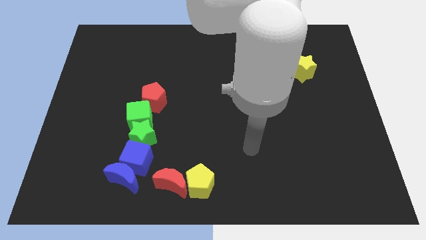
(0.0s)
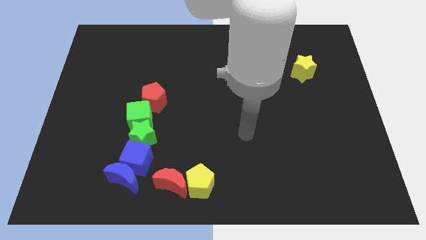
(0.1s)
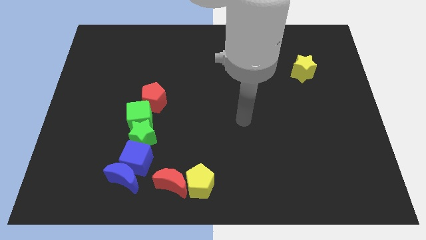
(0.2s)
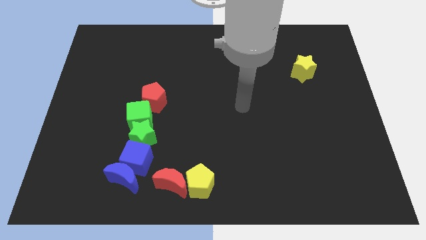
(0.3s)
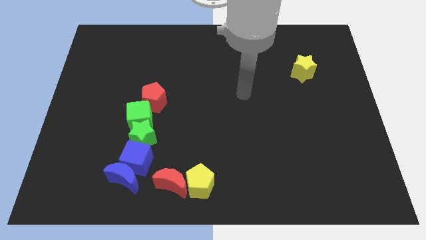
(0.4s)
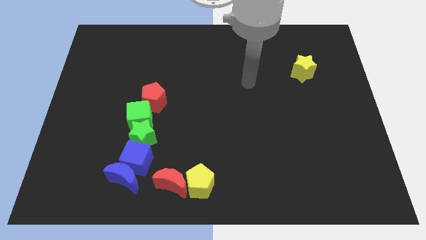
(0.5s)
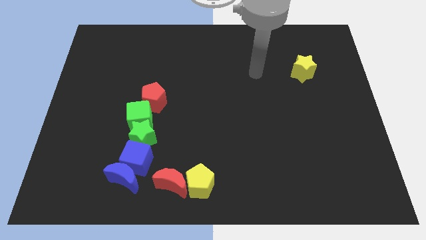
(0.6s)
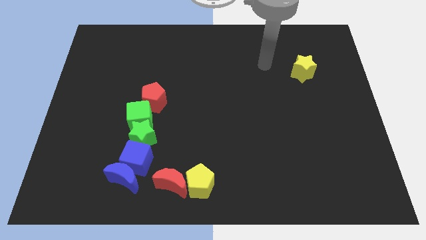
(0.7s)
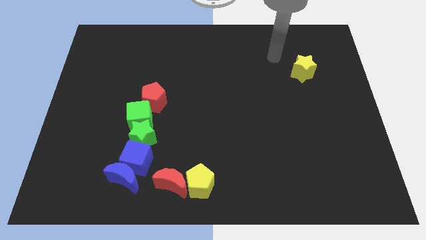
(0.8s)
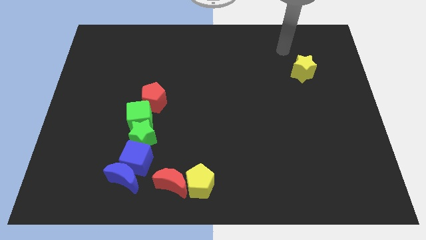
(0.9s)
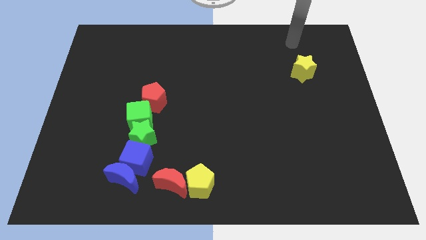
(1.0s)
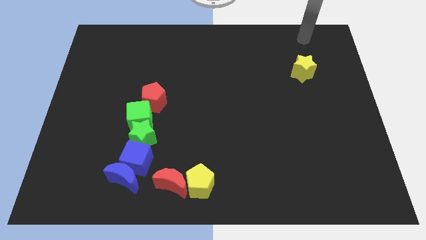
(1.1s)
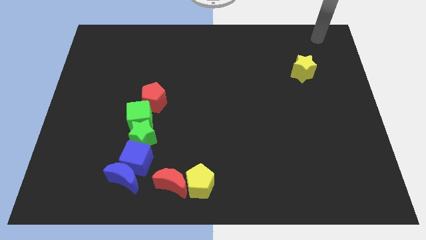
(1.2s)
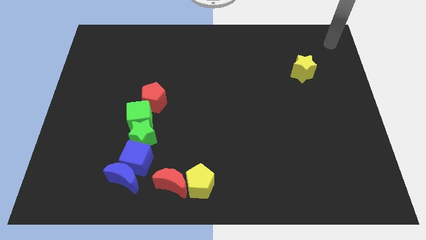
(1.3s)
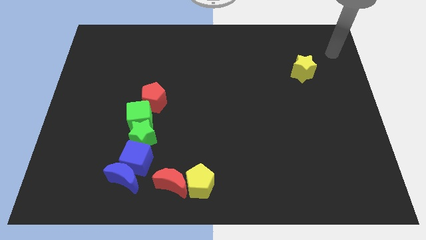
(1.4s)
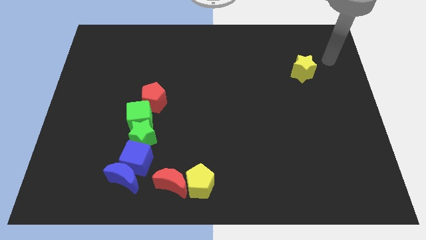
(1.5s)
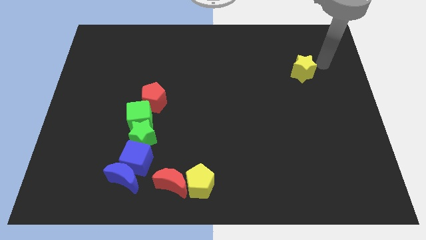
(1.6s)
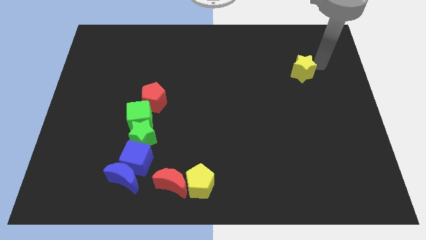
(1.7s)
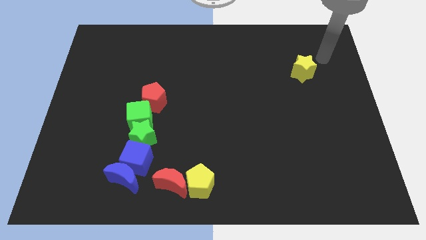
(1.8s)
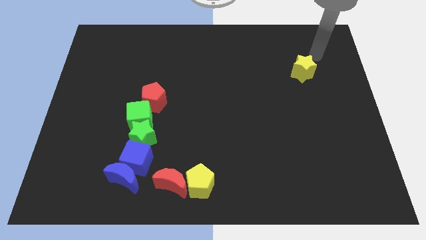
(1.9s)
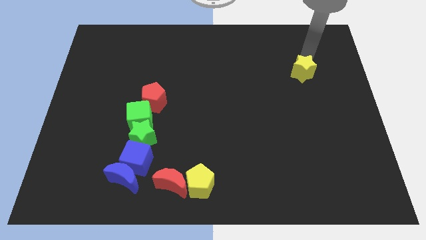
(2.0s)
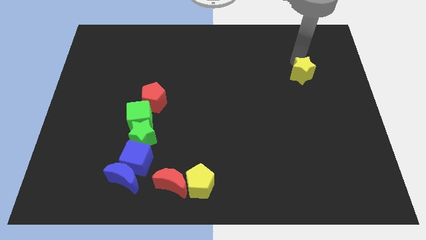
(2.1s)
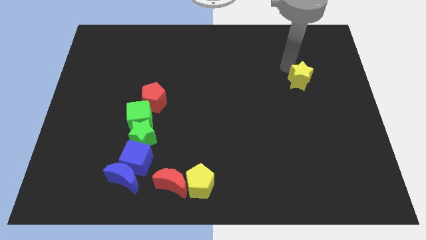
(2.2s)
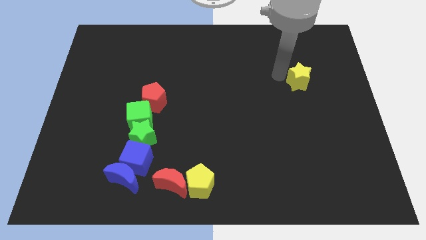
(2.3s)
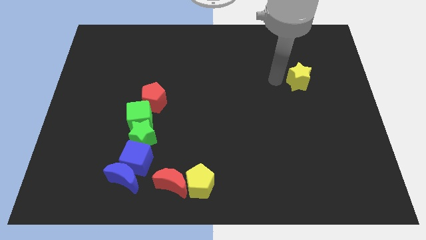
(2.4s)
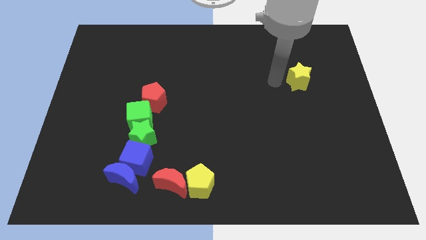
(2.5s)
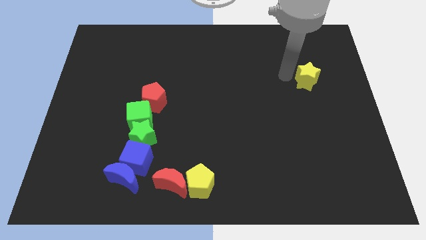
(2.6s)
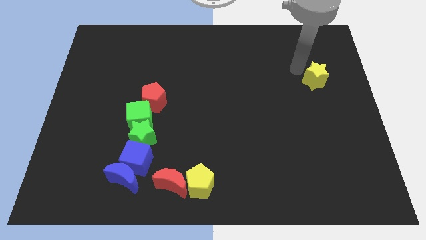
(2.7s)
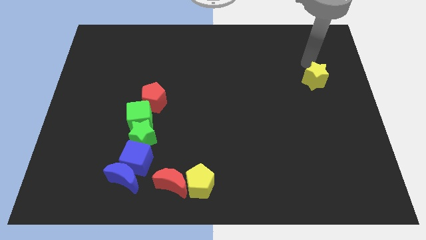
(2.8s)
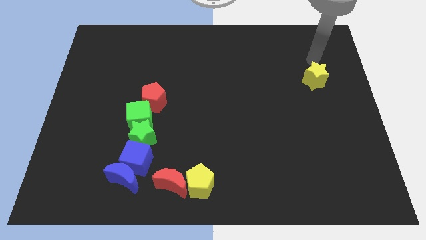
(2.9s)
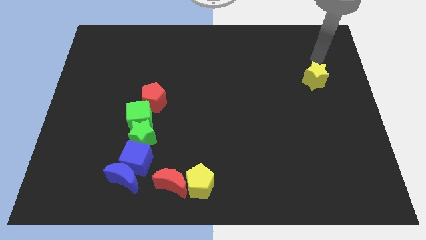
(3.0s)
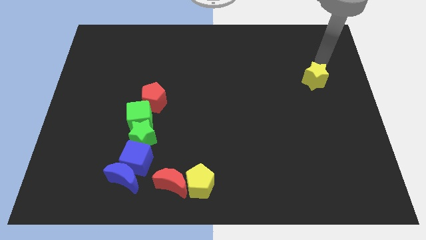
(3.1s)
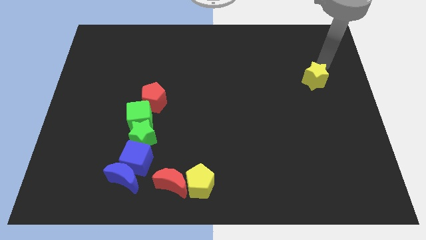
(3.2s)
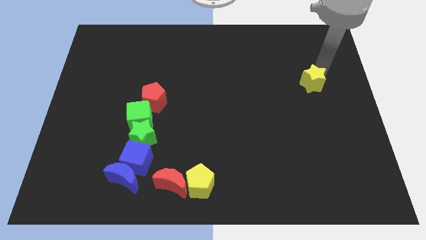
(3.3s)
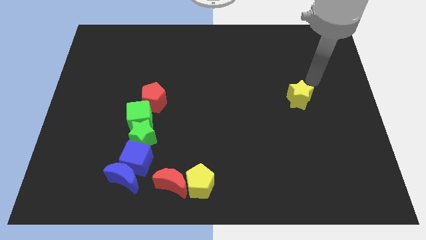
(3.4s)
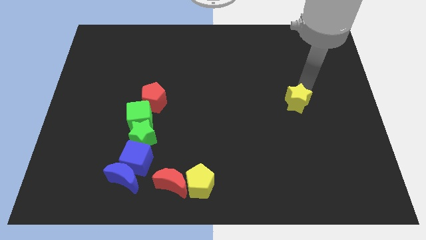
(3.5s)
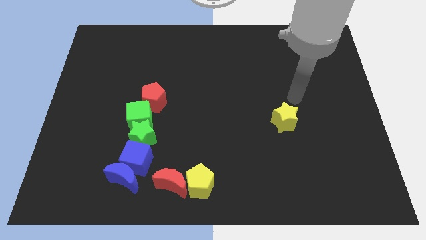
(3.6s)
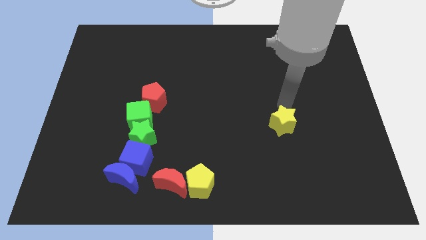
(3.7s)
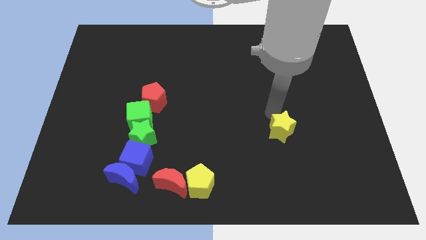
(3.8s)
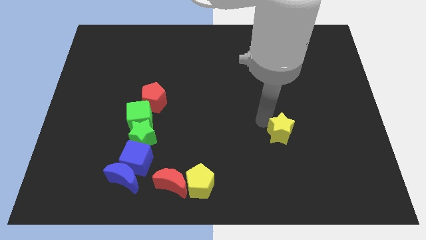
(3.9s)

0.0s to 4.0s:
slide the yellow star horizontally right of the green star

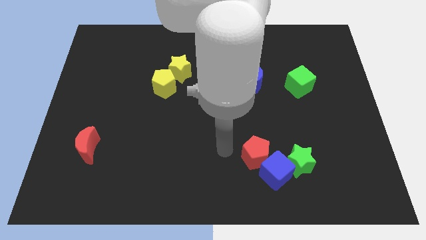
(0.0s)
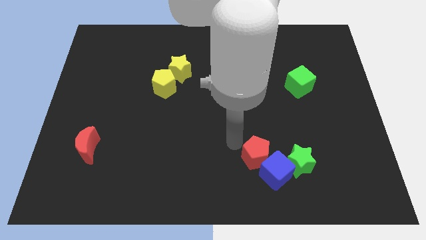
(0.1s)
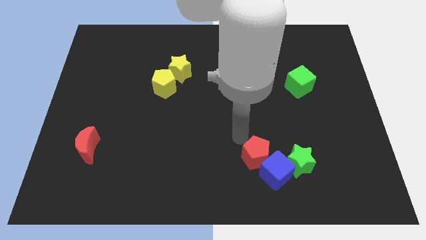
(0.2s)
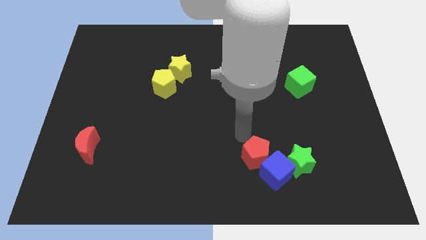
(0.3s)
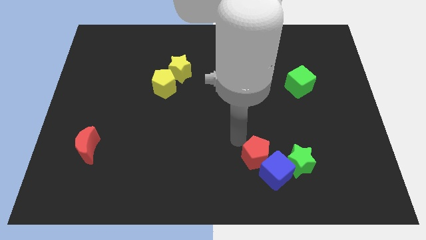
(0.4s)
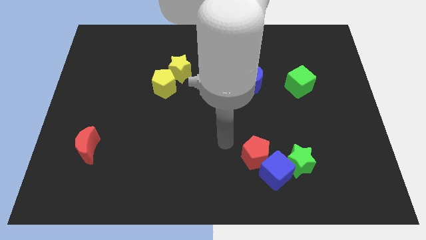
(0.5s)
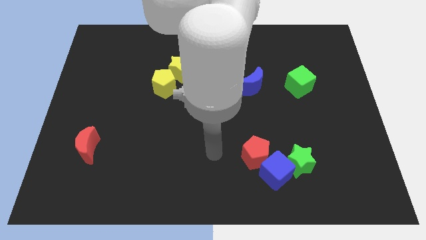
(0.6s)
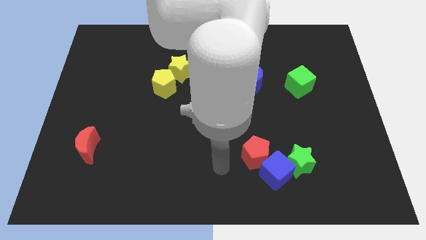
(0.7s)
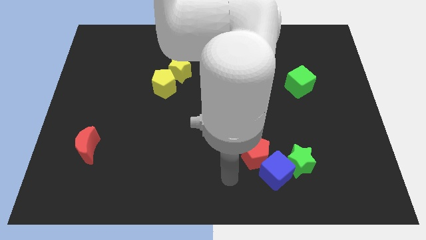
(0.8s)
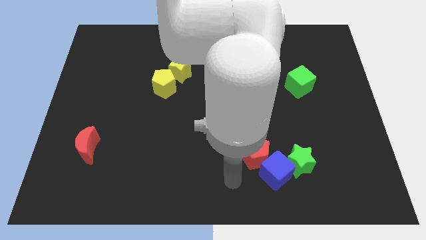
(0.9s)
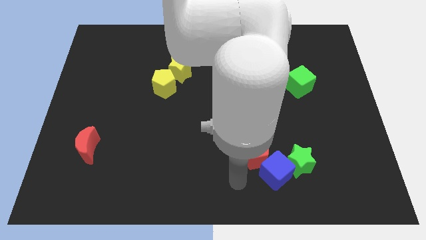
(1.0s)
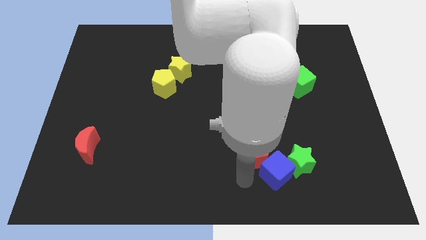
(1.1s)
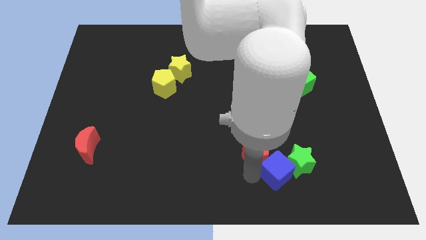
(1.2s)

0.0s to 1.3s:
place your hand to the bottom of red pentagon

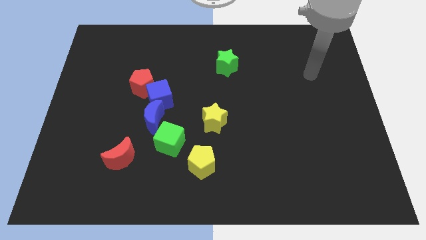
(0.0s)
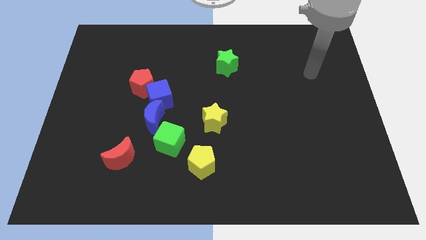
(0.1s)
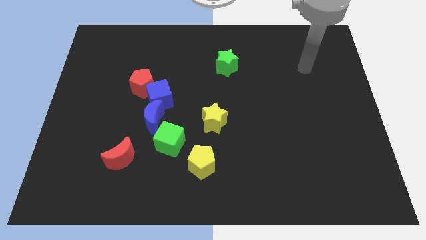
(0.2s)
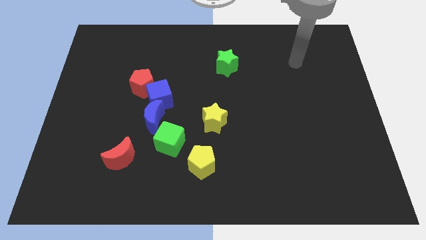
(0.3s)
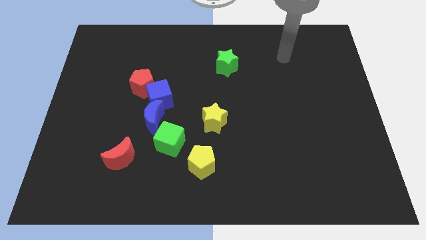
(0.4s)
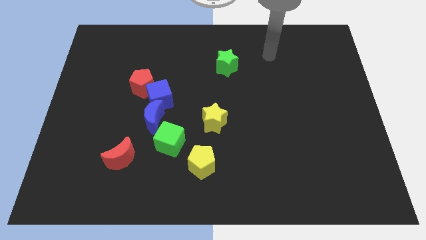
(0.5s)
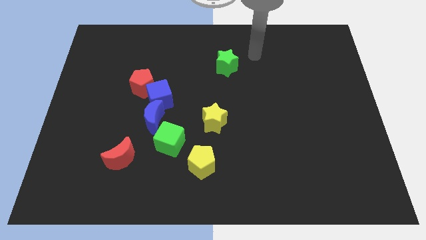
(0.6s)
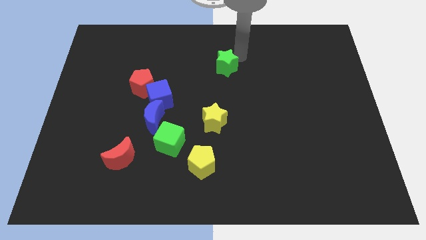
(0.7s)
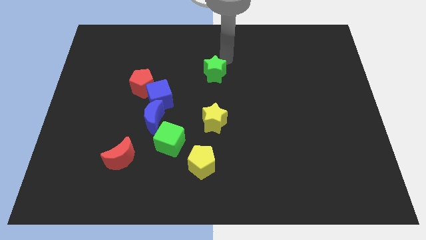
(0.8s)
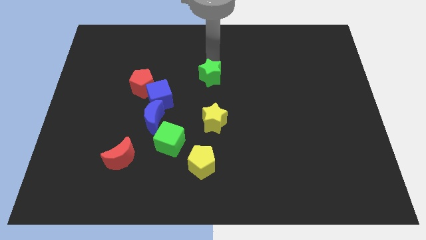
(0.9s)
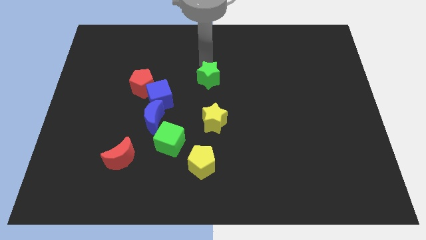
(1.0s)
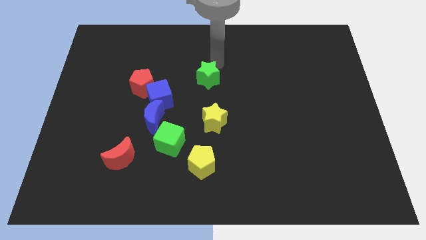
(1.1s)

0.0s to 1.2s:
place green star vertical to the top of yellow star

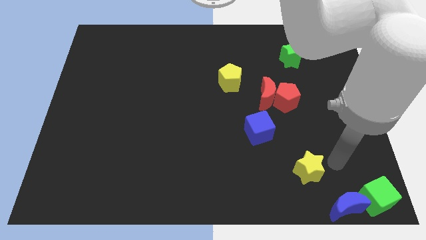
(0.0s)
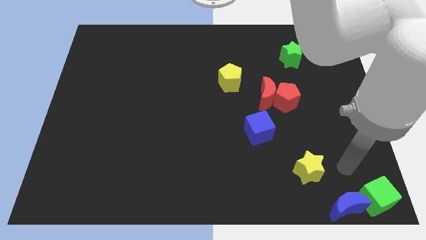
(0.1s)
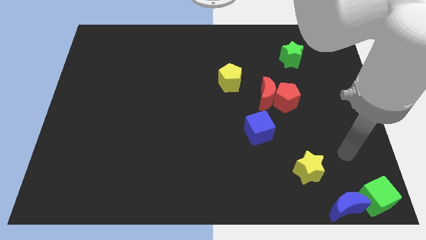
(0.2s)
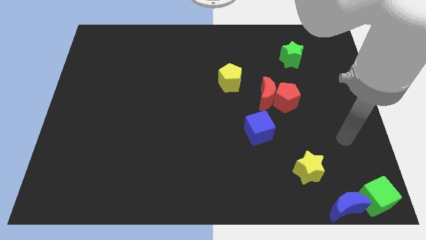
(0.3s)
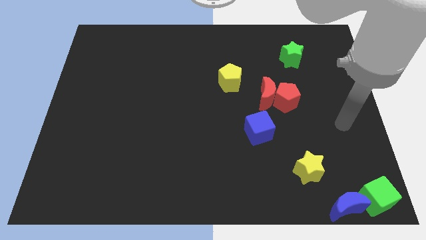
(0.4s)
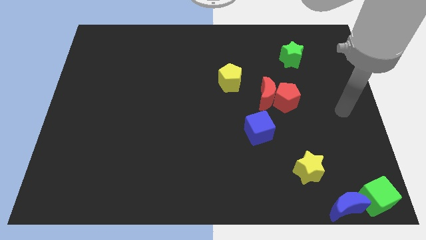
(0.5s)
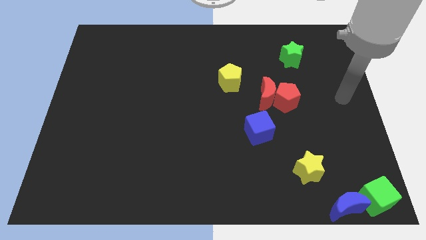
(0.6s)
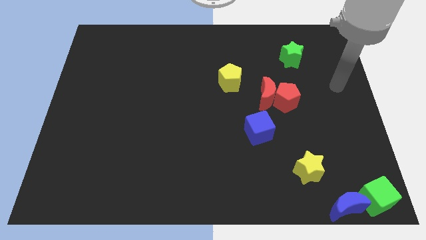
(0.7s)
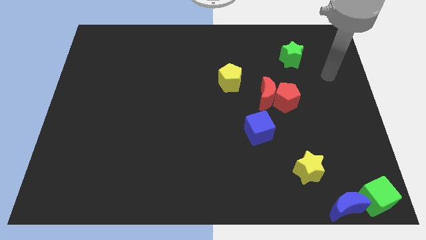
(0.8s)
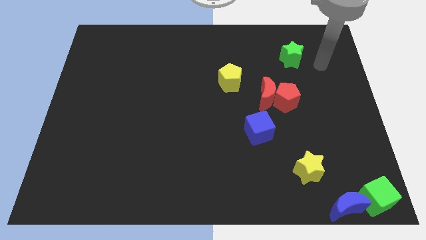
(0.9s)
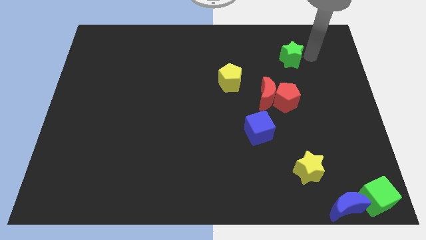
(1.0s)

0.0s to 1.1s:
move your arm away from yellow star

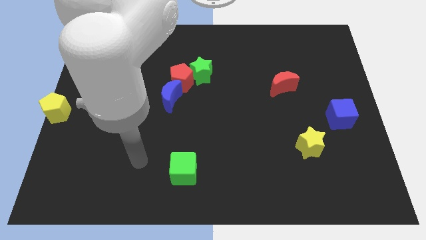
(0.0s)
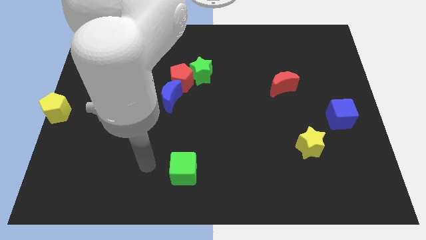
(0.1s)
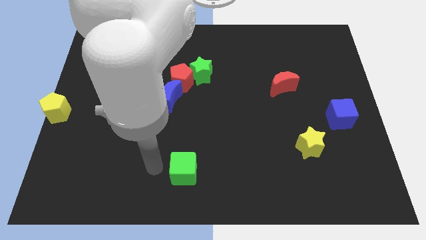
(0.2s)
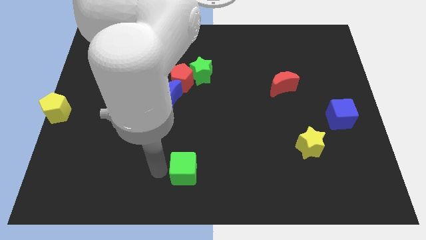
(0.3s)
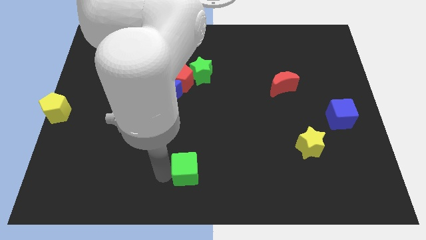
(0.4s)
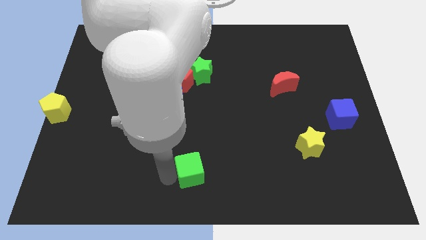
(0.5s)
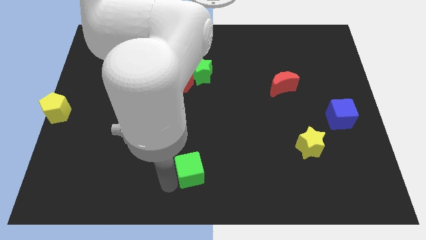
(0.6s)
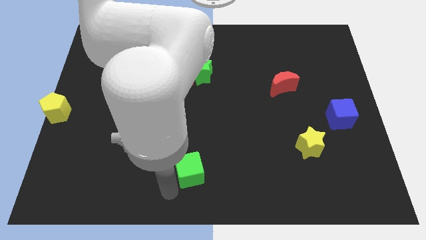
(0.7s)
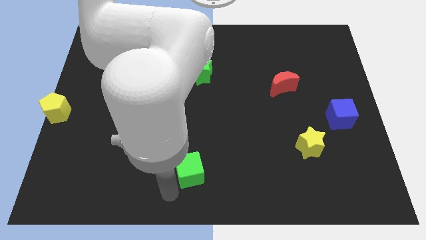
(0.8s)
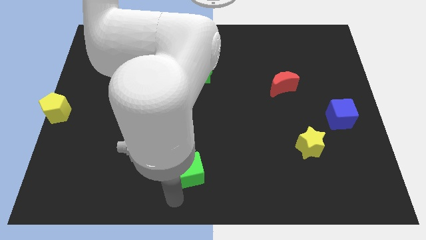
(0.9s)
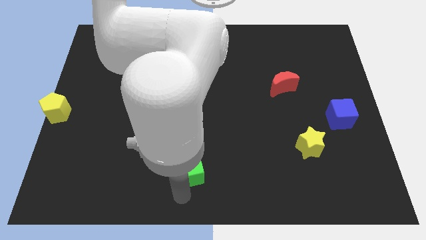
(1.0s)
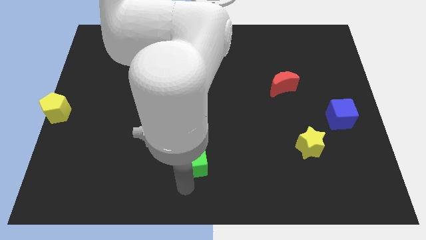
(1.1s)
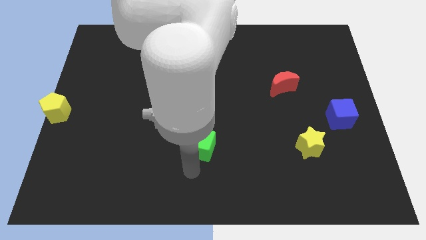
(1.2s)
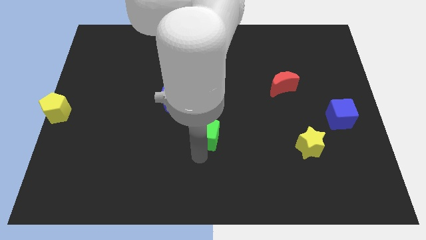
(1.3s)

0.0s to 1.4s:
slightly move the green cube towards the top
